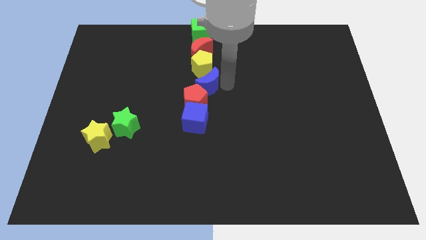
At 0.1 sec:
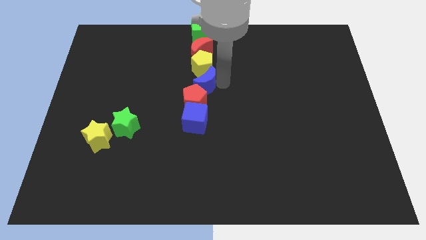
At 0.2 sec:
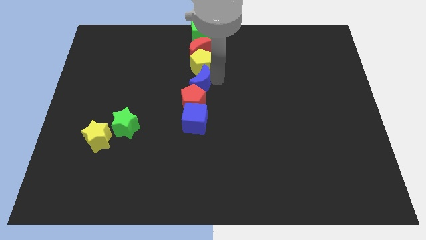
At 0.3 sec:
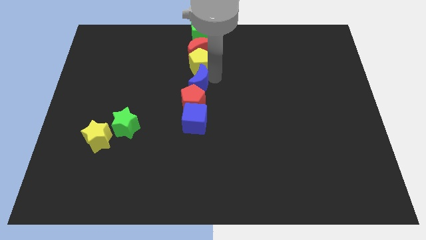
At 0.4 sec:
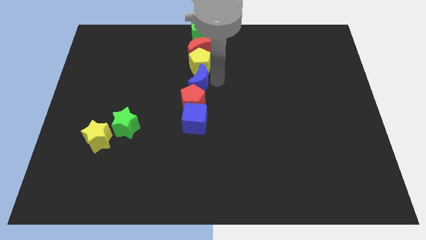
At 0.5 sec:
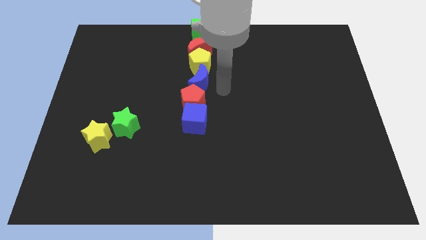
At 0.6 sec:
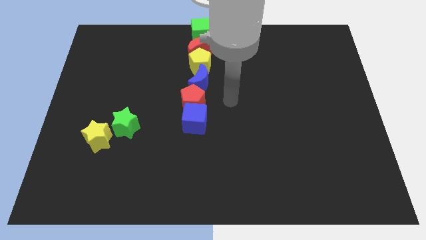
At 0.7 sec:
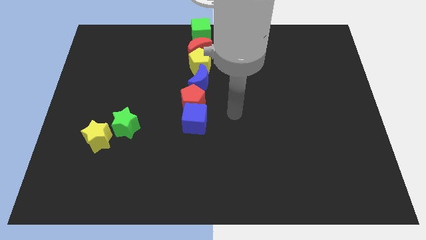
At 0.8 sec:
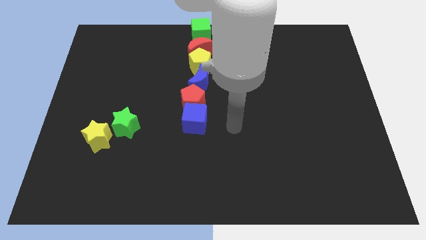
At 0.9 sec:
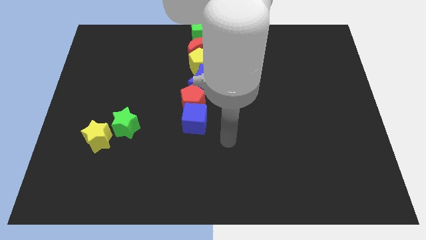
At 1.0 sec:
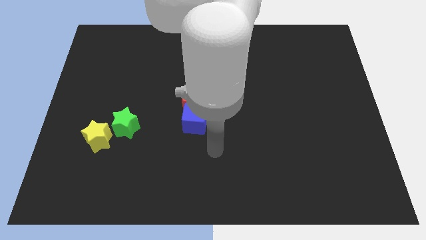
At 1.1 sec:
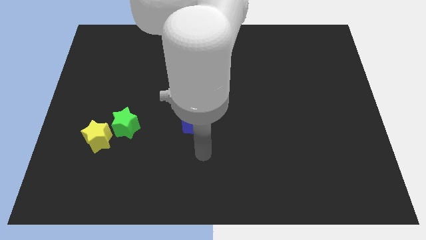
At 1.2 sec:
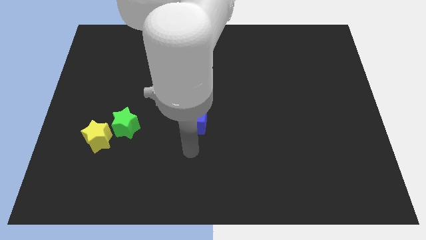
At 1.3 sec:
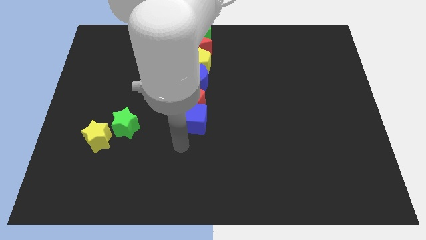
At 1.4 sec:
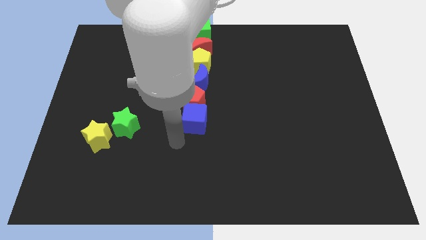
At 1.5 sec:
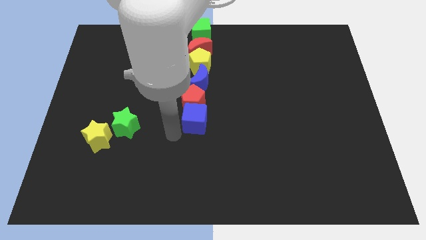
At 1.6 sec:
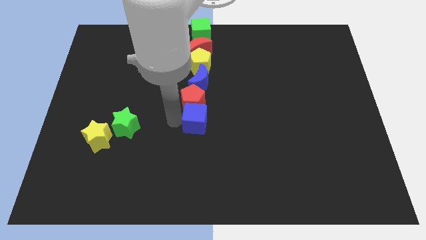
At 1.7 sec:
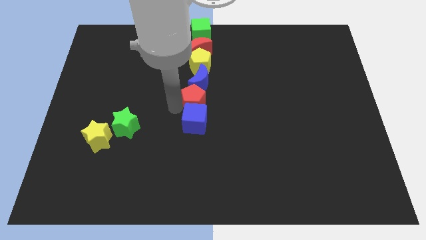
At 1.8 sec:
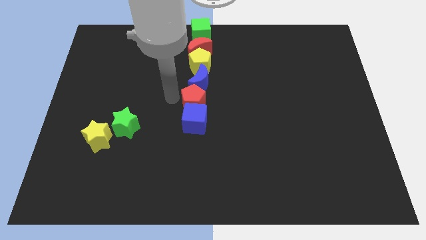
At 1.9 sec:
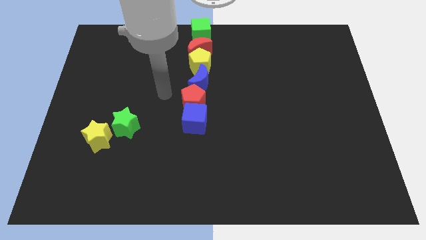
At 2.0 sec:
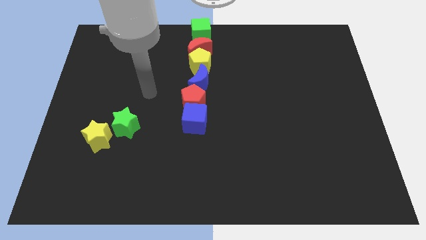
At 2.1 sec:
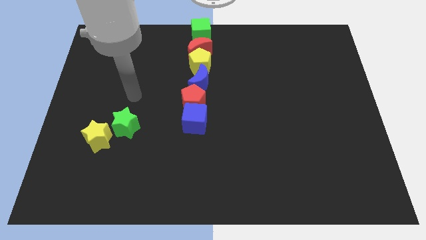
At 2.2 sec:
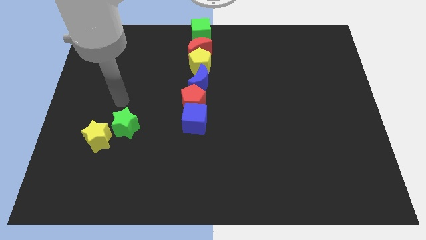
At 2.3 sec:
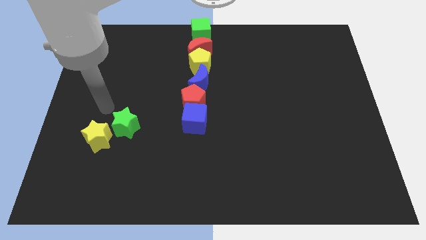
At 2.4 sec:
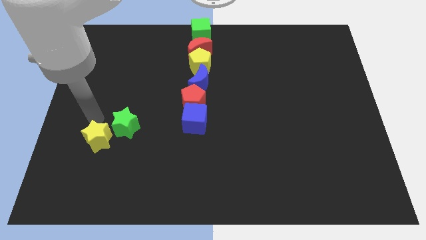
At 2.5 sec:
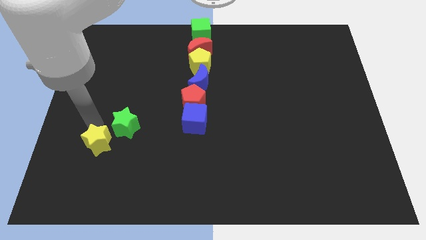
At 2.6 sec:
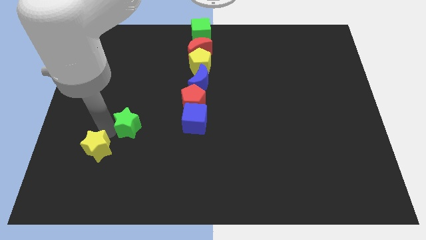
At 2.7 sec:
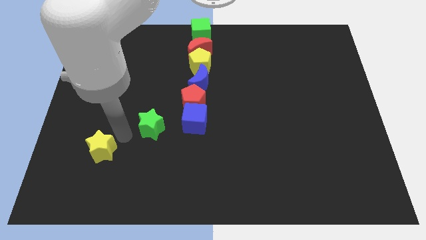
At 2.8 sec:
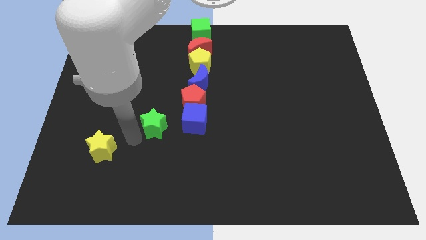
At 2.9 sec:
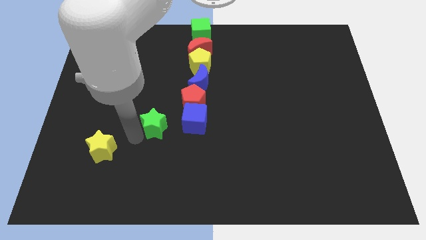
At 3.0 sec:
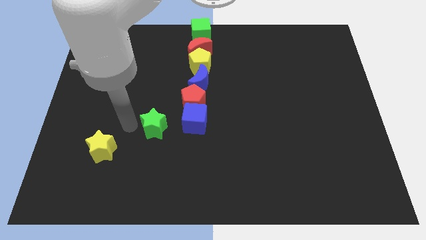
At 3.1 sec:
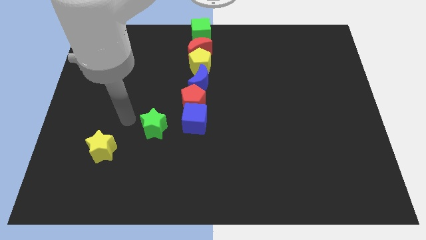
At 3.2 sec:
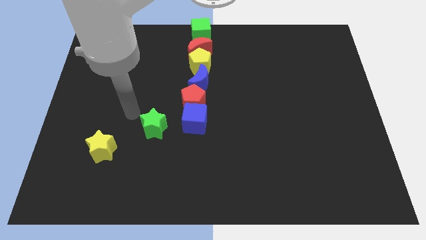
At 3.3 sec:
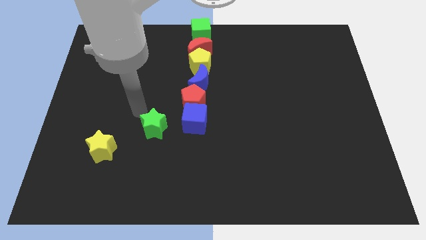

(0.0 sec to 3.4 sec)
separate the yellow star and green star

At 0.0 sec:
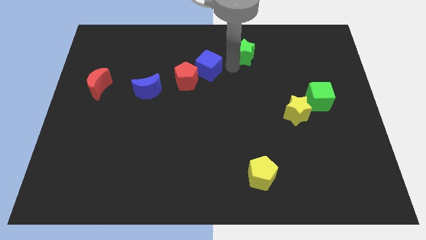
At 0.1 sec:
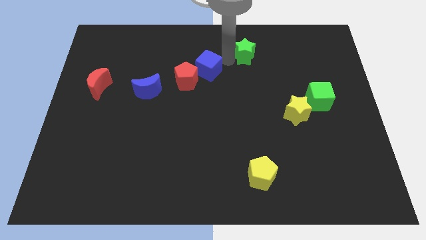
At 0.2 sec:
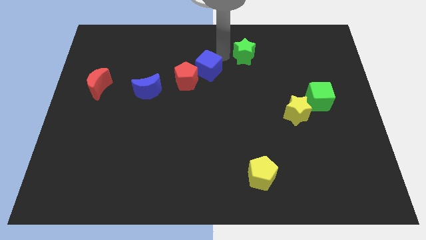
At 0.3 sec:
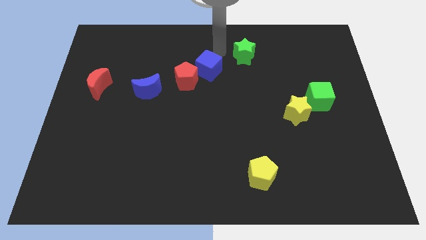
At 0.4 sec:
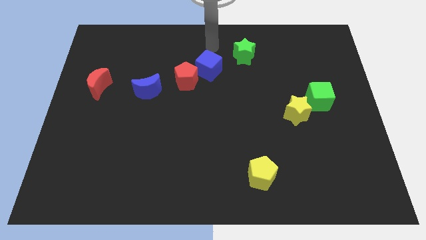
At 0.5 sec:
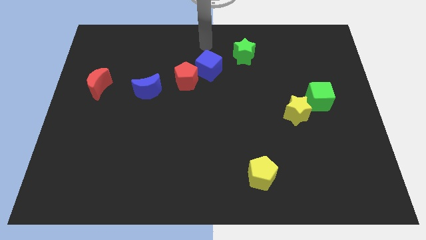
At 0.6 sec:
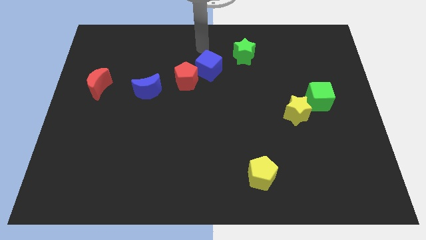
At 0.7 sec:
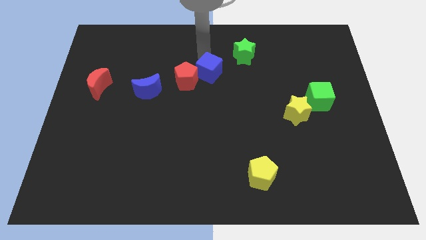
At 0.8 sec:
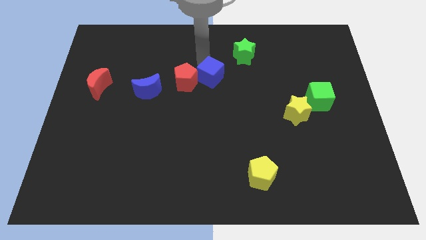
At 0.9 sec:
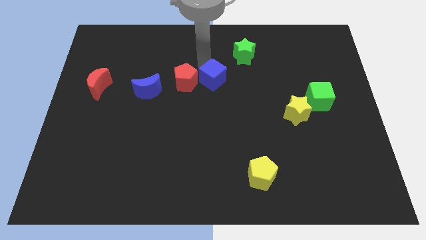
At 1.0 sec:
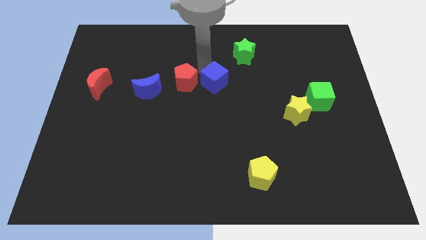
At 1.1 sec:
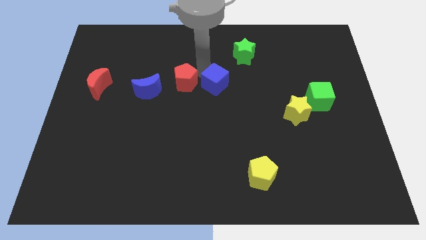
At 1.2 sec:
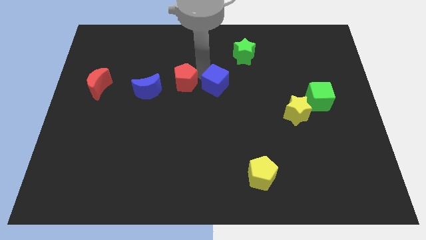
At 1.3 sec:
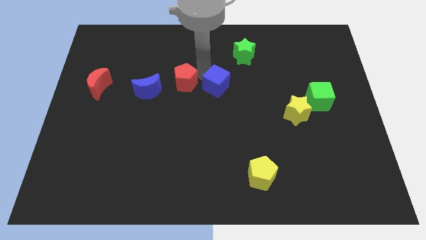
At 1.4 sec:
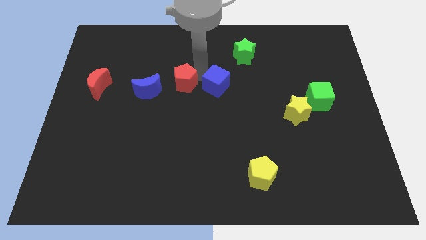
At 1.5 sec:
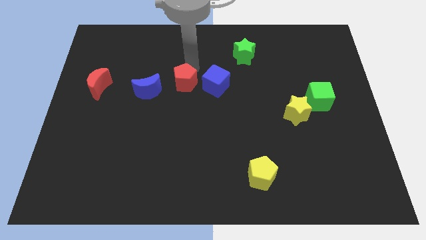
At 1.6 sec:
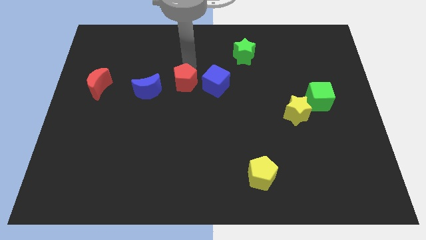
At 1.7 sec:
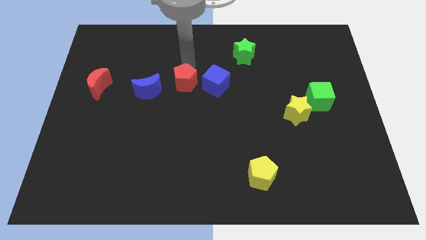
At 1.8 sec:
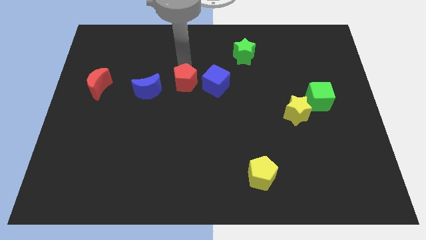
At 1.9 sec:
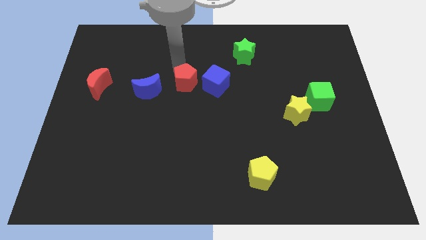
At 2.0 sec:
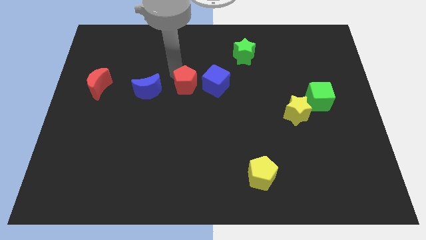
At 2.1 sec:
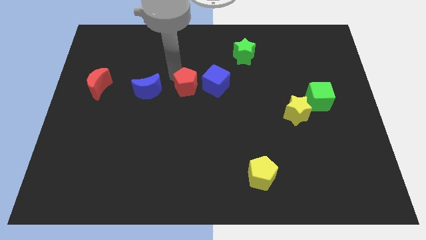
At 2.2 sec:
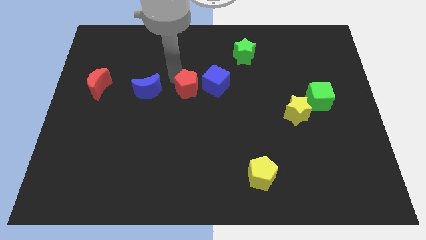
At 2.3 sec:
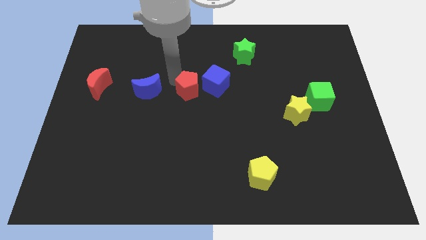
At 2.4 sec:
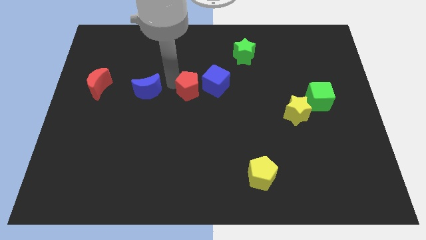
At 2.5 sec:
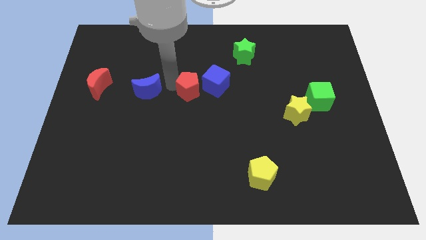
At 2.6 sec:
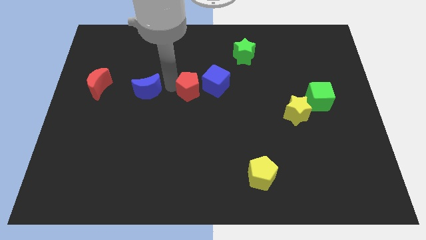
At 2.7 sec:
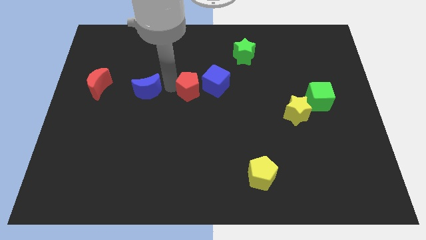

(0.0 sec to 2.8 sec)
push the blue cube and the red pentagon to the center of the board

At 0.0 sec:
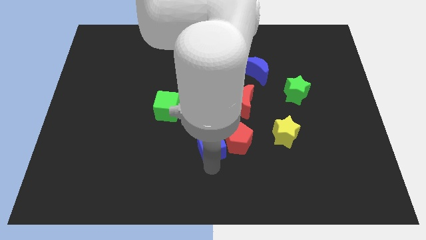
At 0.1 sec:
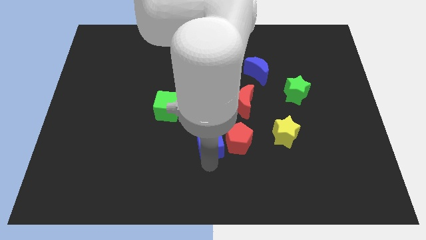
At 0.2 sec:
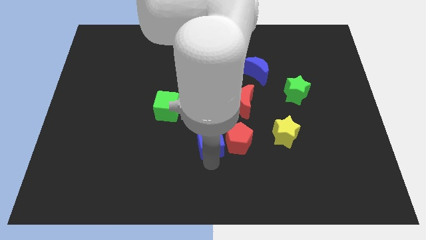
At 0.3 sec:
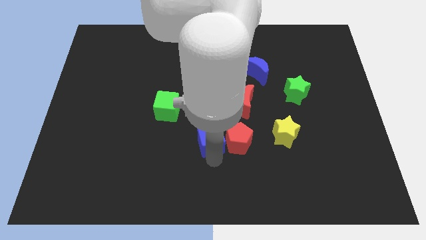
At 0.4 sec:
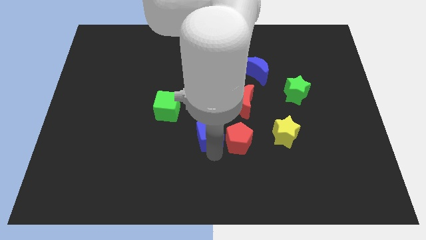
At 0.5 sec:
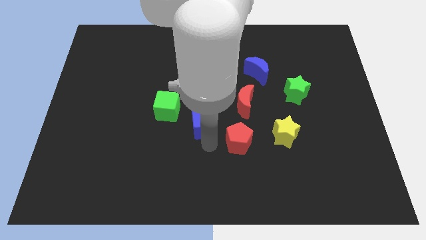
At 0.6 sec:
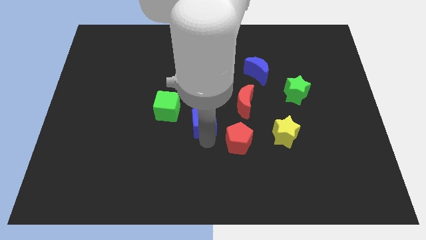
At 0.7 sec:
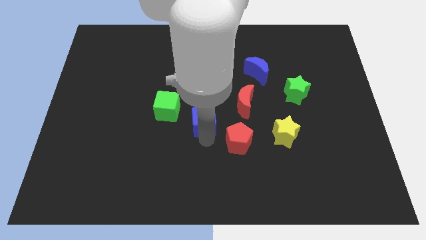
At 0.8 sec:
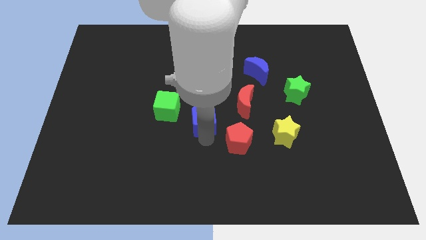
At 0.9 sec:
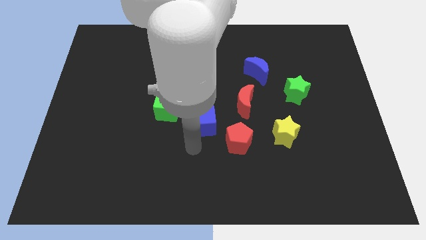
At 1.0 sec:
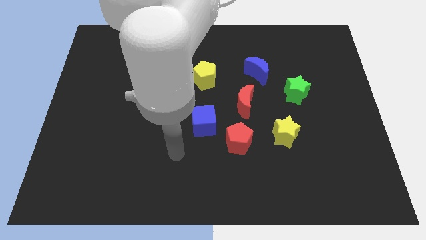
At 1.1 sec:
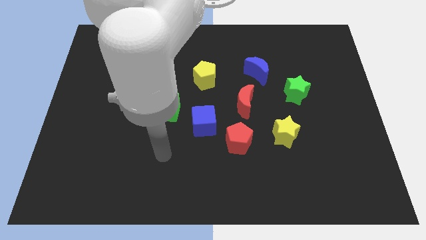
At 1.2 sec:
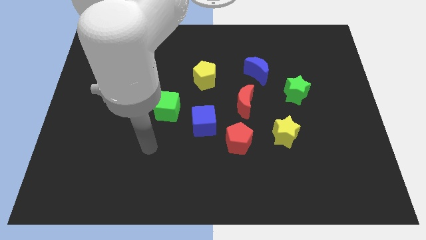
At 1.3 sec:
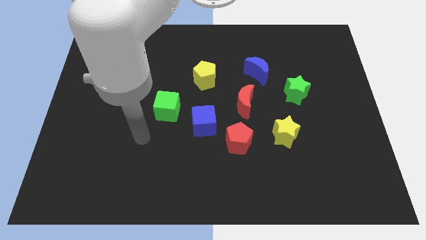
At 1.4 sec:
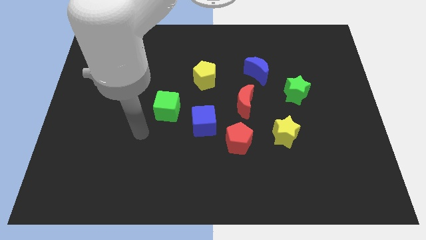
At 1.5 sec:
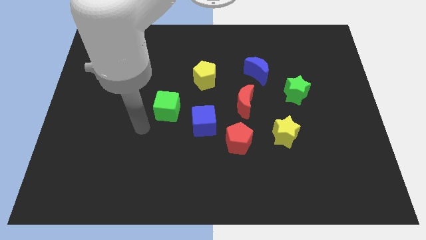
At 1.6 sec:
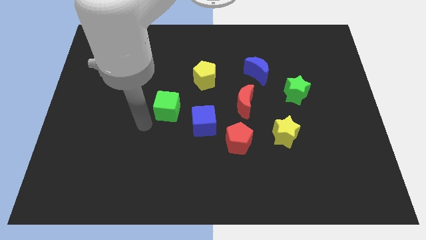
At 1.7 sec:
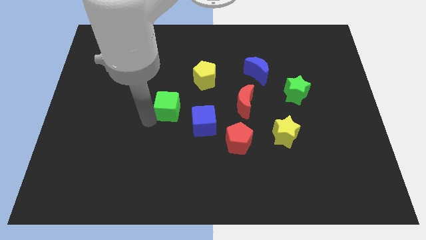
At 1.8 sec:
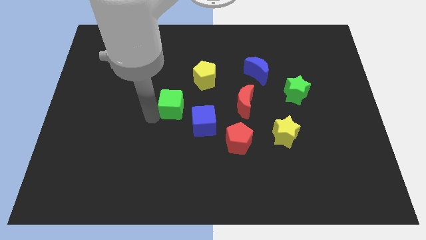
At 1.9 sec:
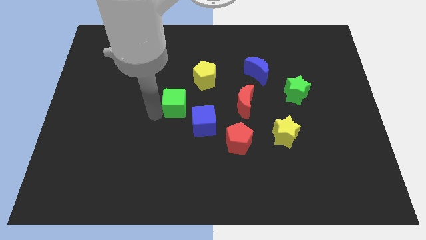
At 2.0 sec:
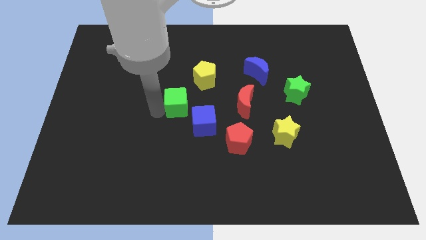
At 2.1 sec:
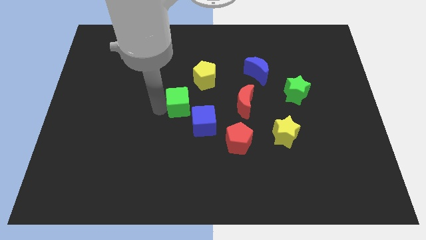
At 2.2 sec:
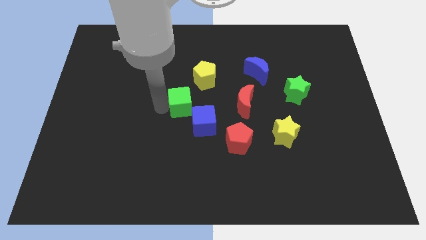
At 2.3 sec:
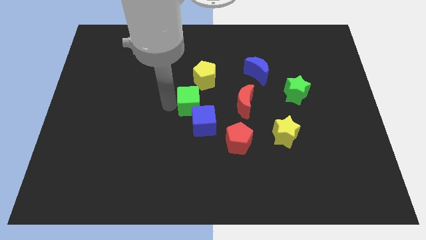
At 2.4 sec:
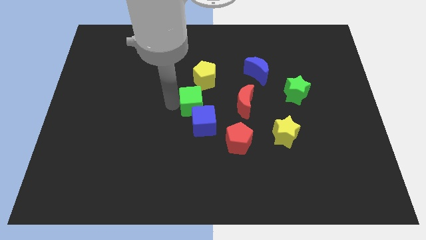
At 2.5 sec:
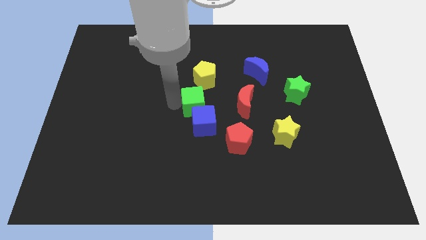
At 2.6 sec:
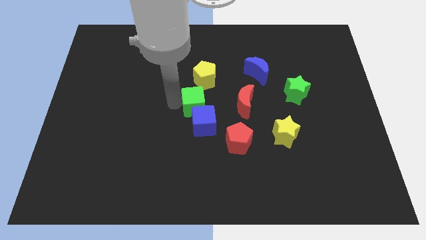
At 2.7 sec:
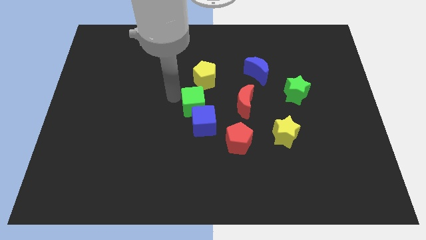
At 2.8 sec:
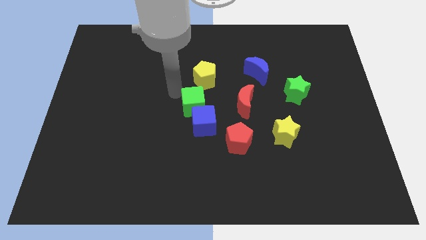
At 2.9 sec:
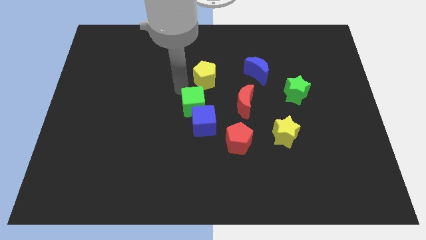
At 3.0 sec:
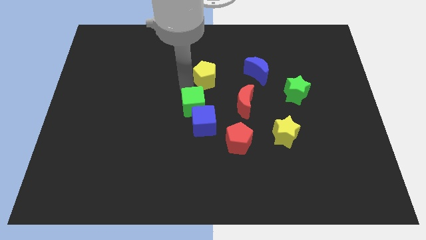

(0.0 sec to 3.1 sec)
push the blue cube away from the red pentagon
